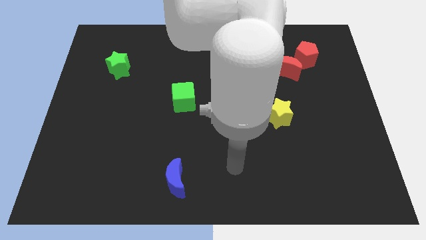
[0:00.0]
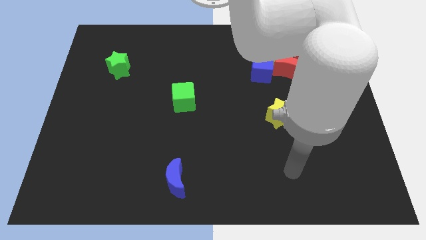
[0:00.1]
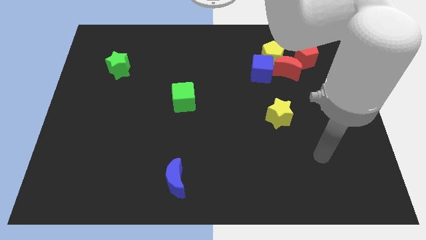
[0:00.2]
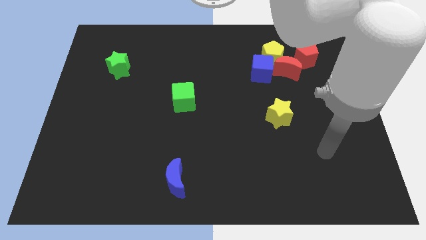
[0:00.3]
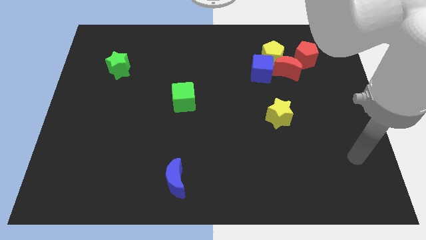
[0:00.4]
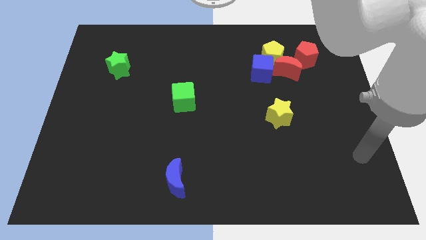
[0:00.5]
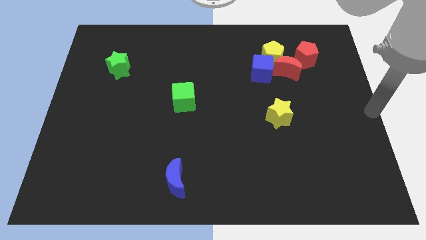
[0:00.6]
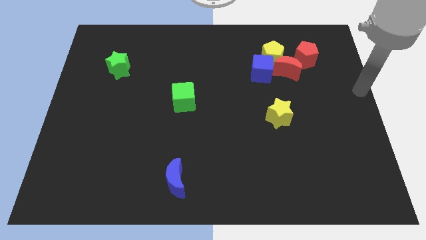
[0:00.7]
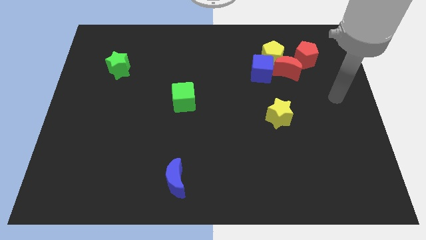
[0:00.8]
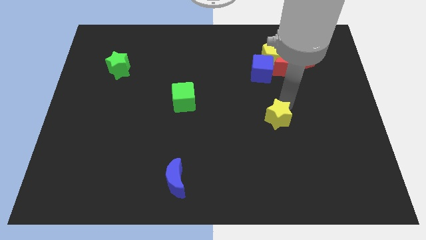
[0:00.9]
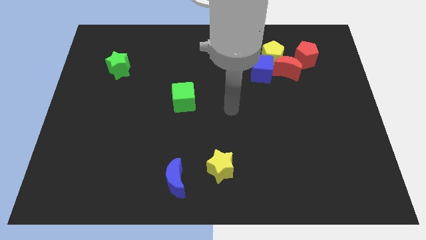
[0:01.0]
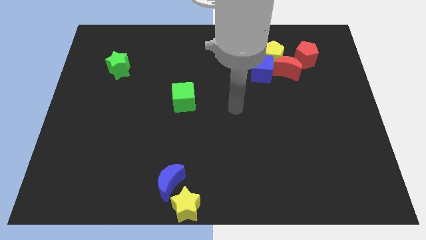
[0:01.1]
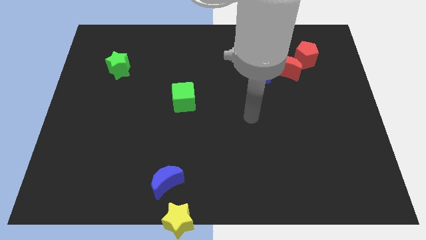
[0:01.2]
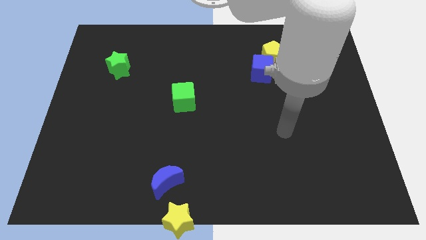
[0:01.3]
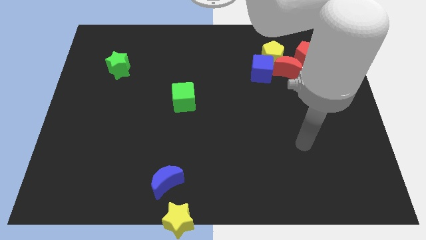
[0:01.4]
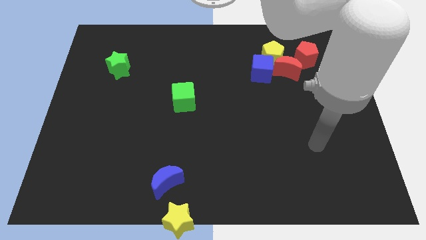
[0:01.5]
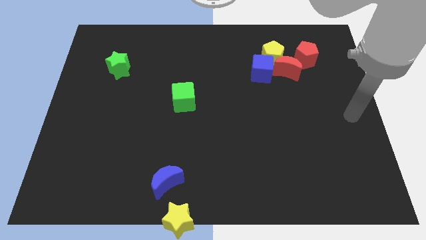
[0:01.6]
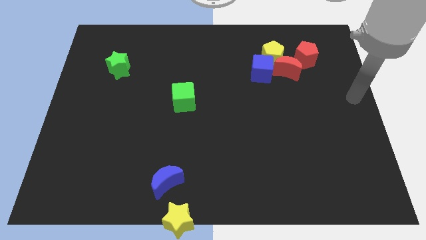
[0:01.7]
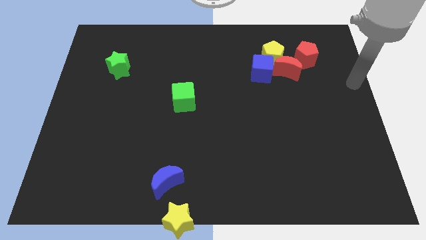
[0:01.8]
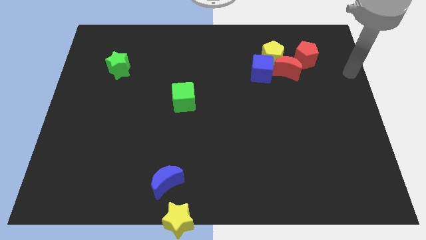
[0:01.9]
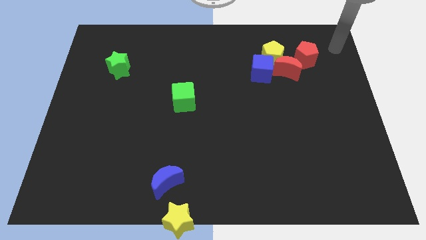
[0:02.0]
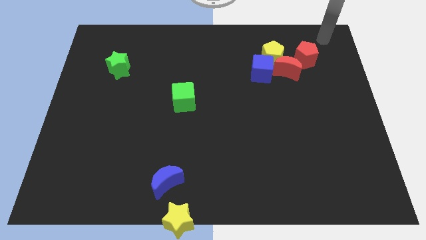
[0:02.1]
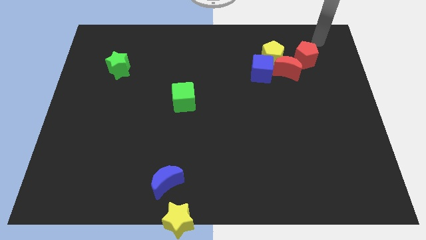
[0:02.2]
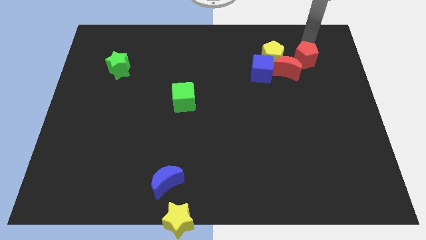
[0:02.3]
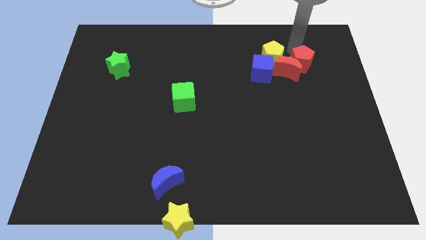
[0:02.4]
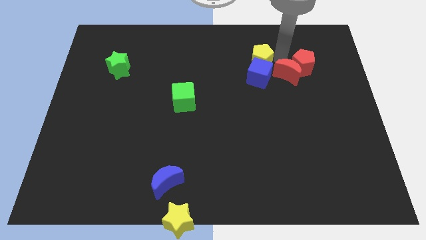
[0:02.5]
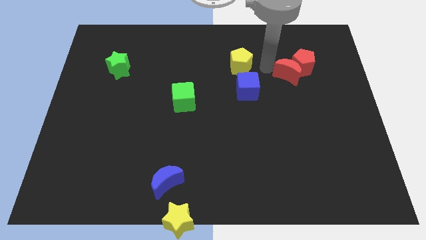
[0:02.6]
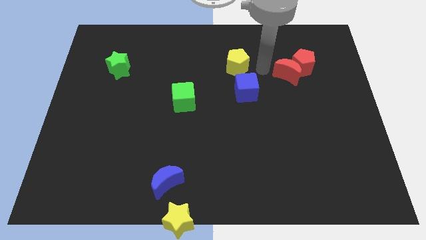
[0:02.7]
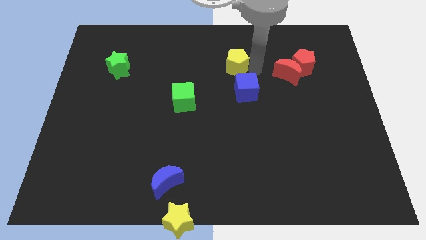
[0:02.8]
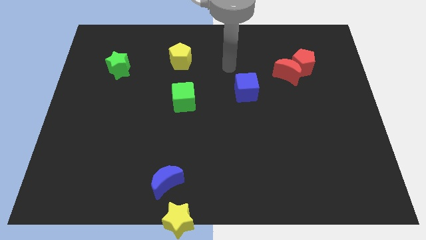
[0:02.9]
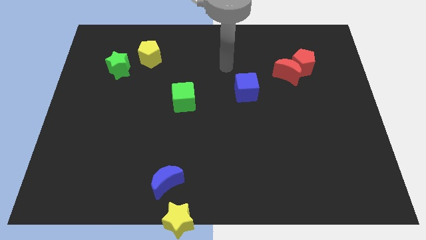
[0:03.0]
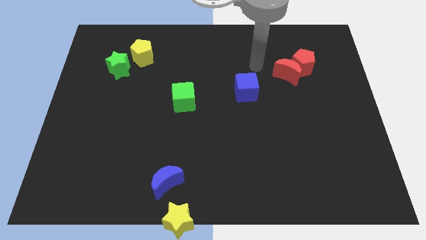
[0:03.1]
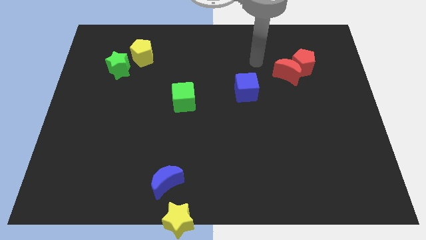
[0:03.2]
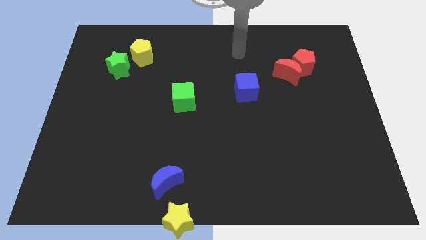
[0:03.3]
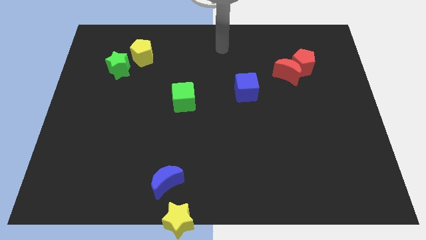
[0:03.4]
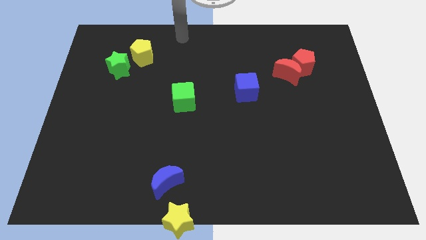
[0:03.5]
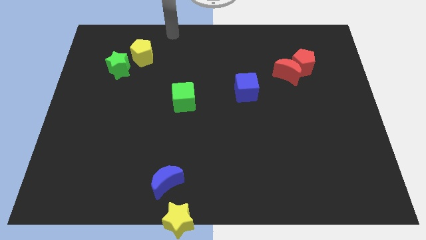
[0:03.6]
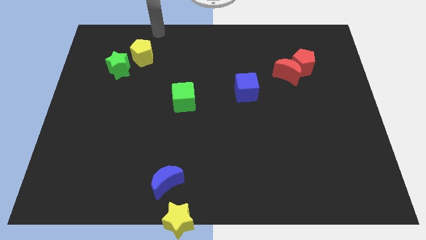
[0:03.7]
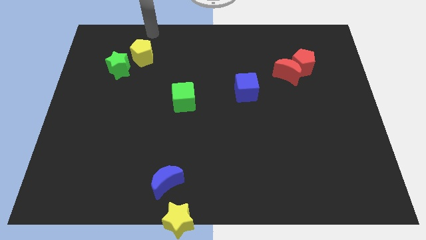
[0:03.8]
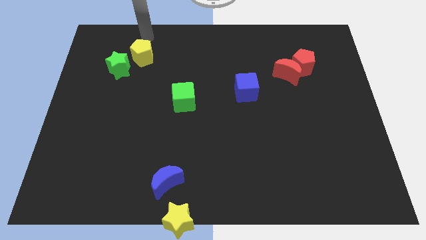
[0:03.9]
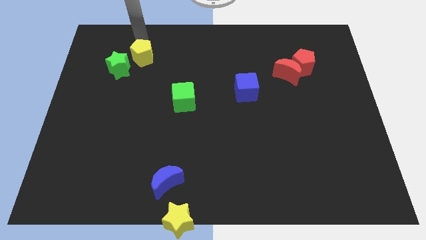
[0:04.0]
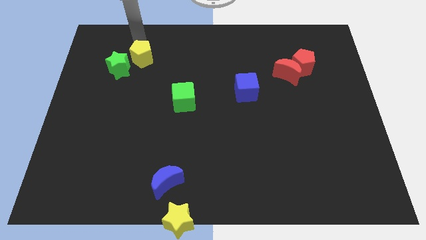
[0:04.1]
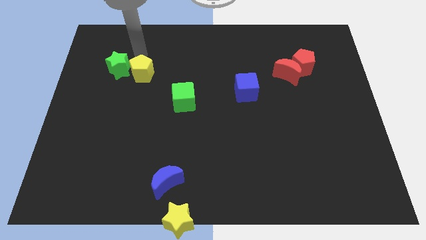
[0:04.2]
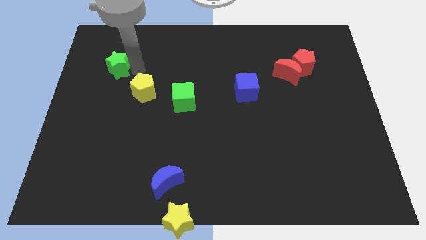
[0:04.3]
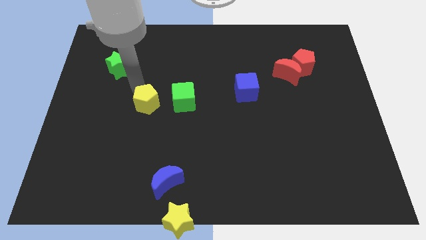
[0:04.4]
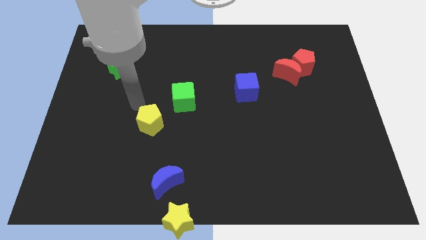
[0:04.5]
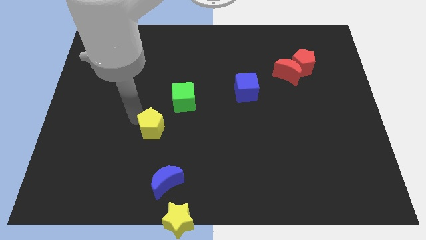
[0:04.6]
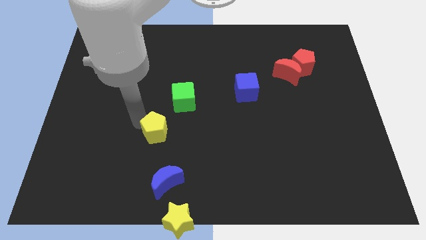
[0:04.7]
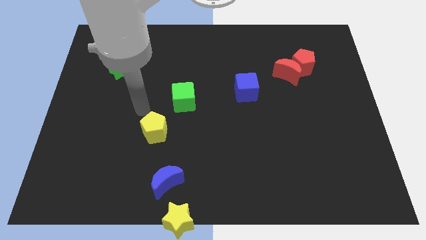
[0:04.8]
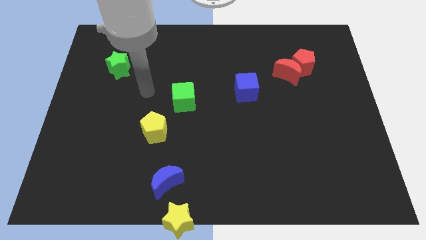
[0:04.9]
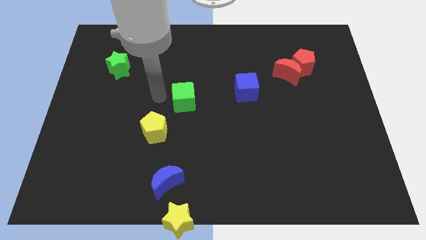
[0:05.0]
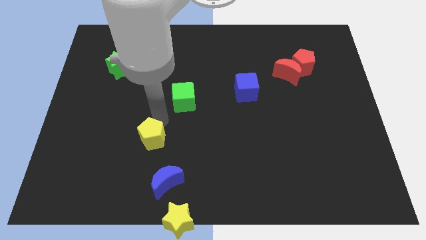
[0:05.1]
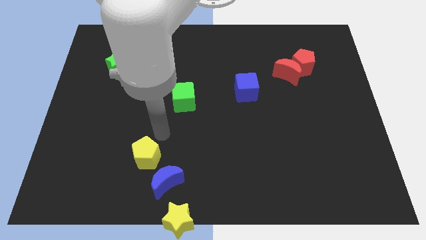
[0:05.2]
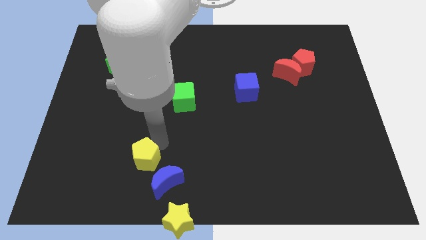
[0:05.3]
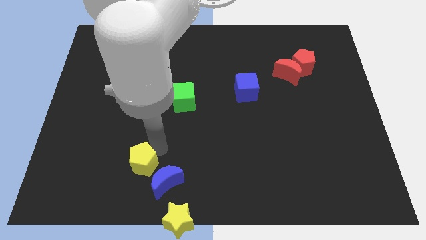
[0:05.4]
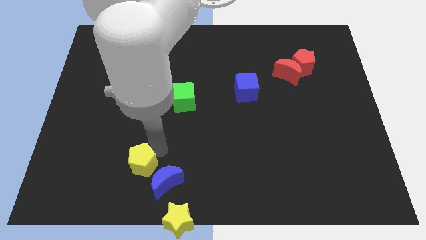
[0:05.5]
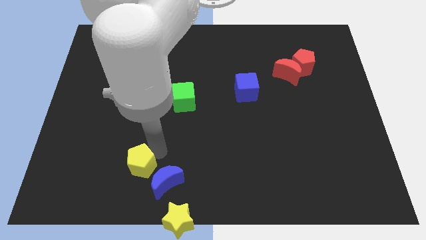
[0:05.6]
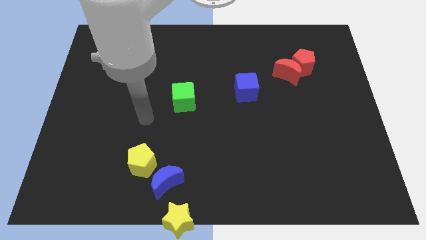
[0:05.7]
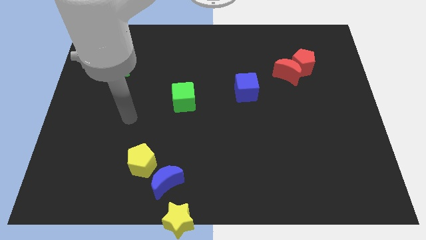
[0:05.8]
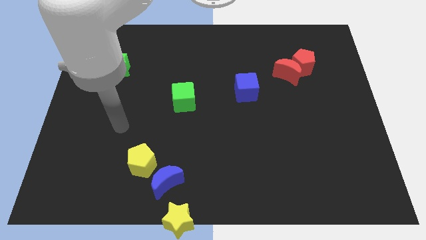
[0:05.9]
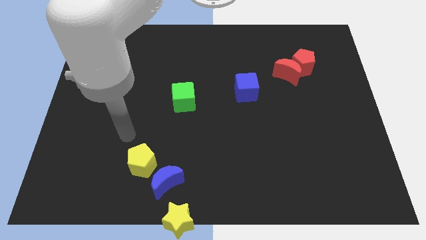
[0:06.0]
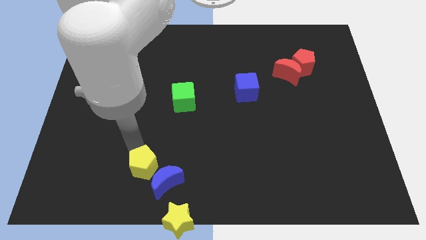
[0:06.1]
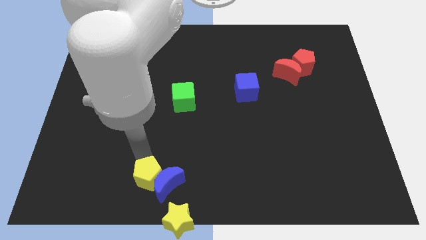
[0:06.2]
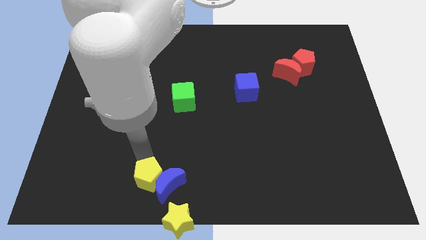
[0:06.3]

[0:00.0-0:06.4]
push the yellow pentagon to the blue moon

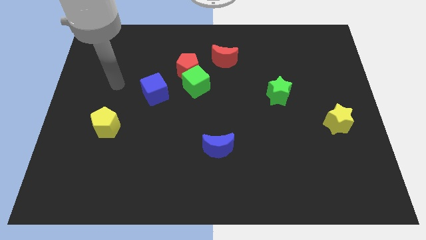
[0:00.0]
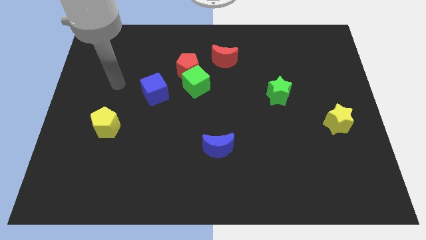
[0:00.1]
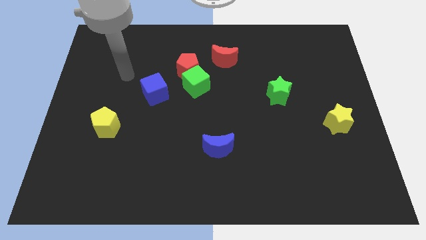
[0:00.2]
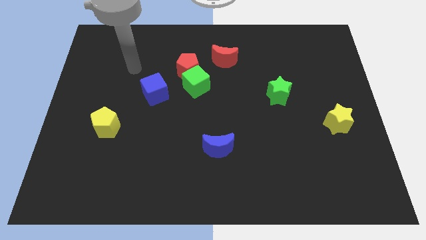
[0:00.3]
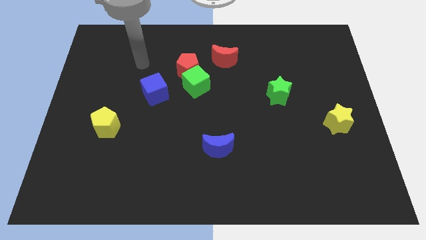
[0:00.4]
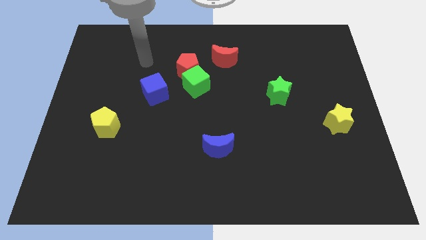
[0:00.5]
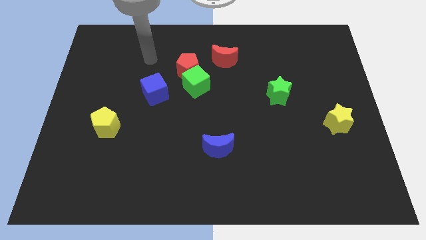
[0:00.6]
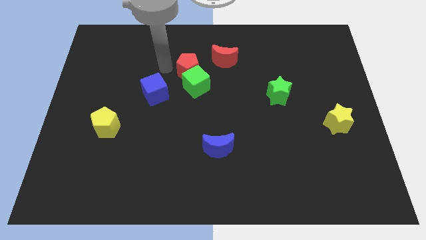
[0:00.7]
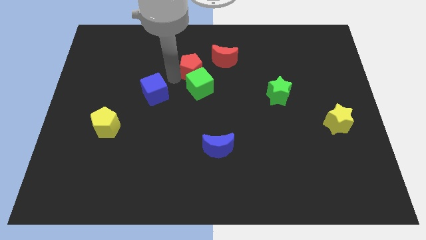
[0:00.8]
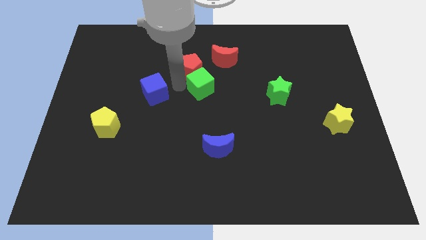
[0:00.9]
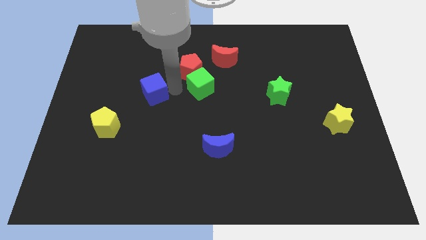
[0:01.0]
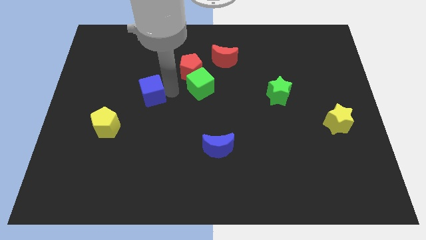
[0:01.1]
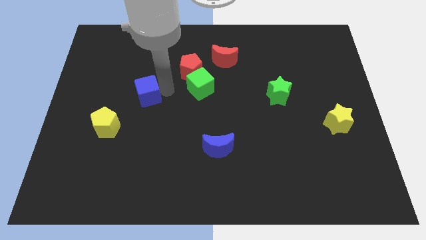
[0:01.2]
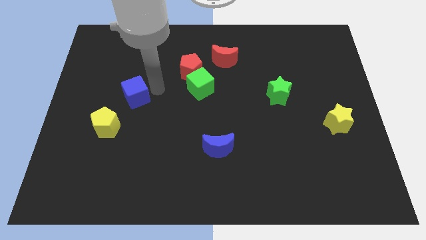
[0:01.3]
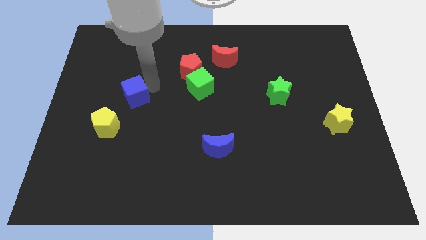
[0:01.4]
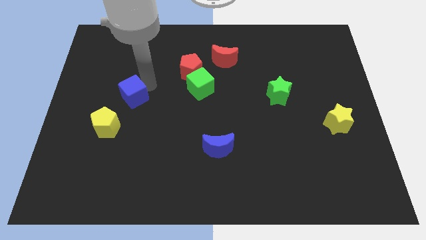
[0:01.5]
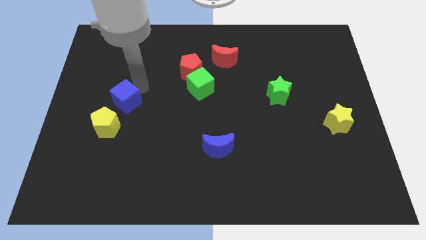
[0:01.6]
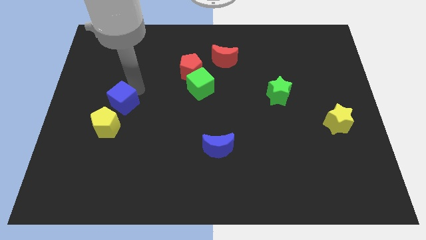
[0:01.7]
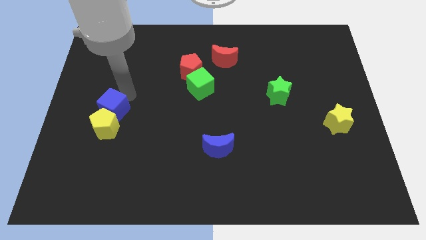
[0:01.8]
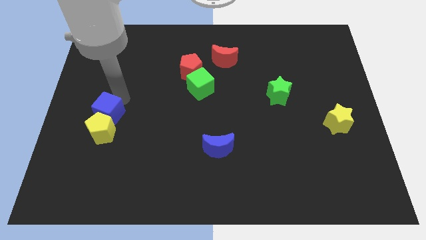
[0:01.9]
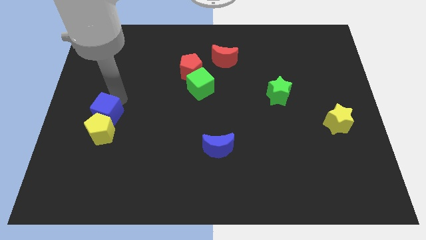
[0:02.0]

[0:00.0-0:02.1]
put the blue cube to the yellow pentagon
